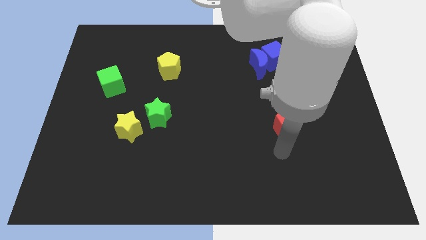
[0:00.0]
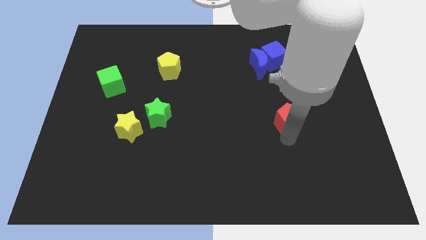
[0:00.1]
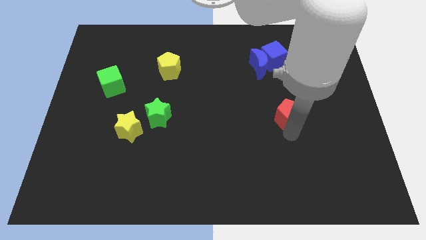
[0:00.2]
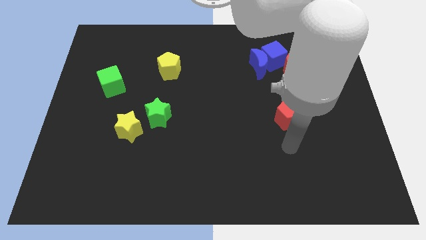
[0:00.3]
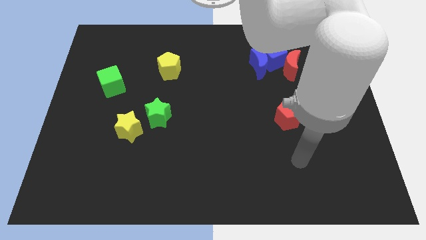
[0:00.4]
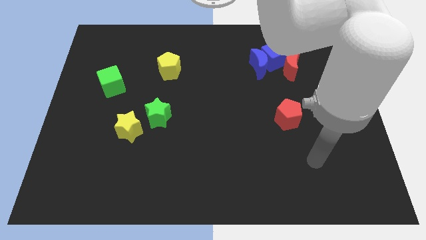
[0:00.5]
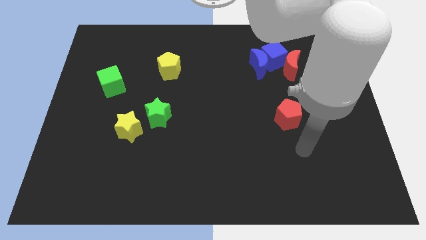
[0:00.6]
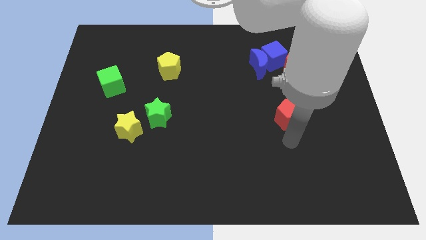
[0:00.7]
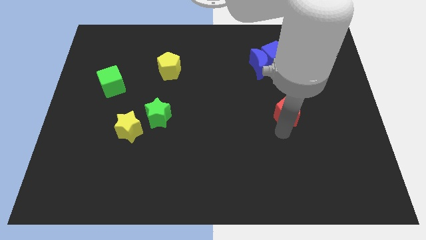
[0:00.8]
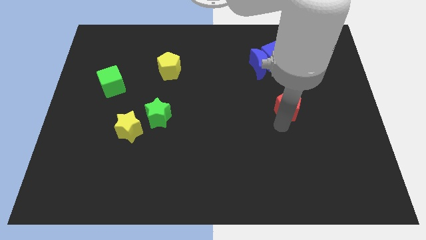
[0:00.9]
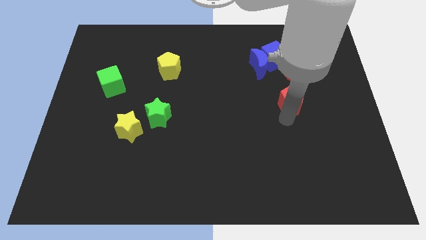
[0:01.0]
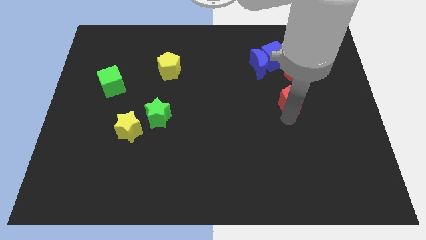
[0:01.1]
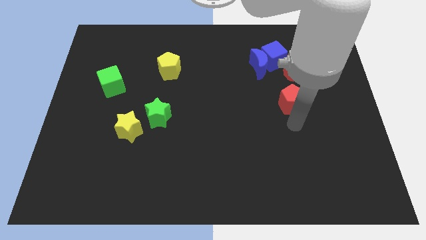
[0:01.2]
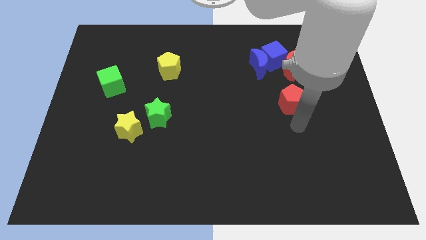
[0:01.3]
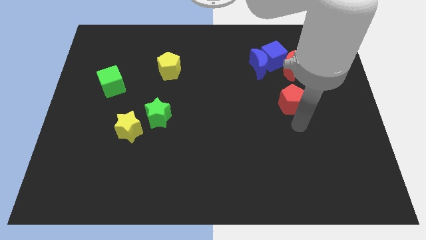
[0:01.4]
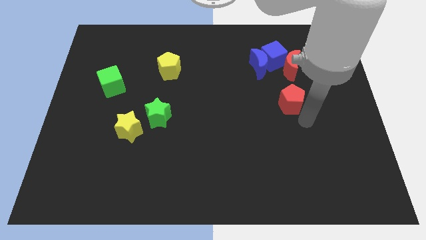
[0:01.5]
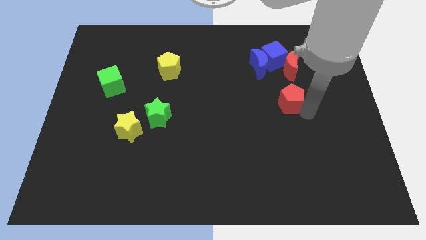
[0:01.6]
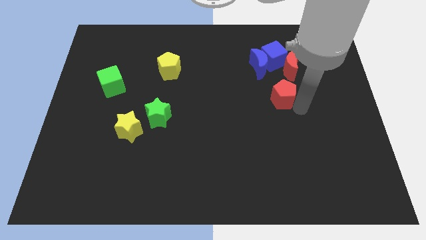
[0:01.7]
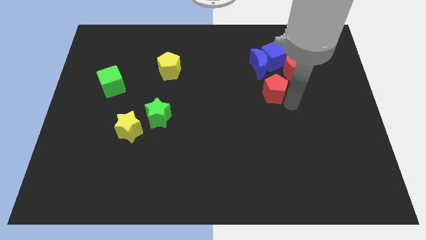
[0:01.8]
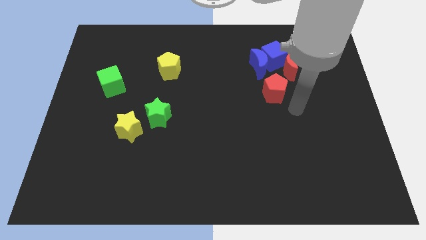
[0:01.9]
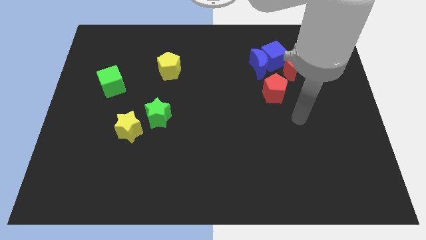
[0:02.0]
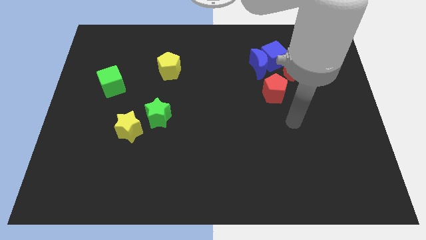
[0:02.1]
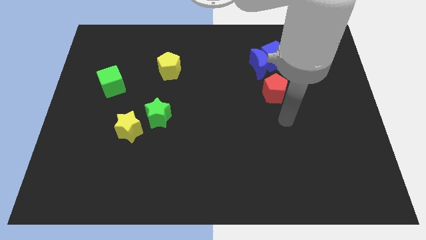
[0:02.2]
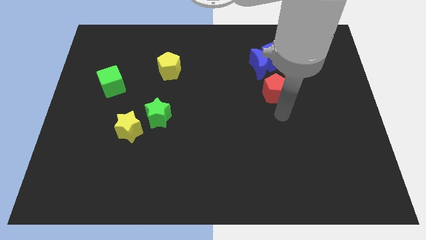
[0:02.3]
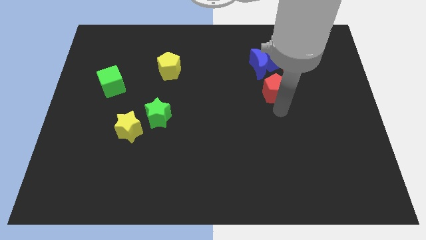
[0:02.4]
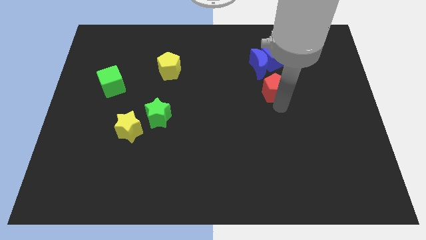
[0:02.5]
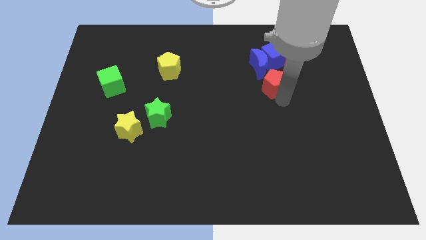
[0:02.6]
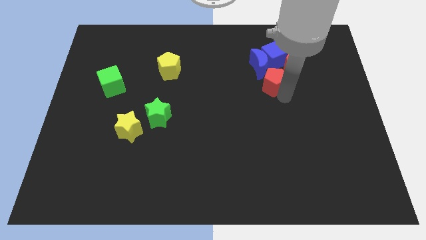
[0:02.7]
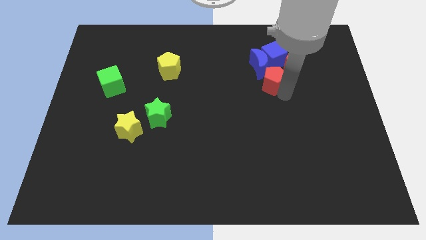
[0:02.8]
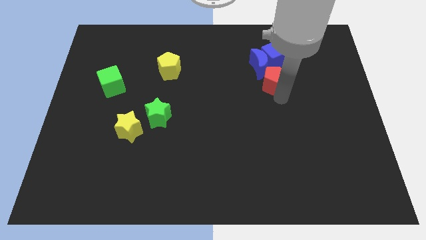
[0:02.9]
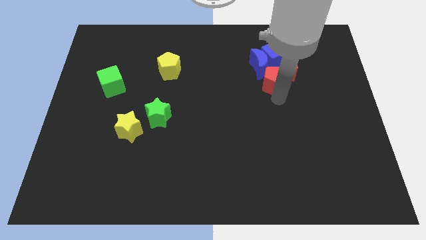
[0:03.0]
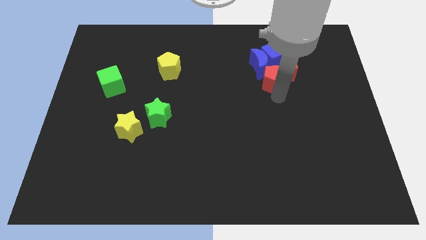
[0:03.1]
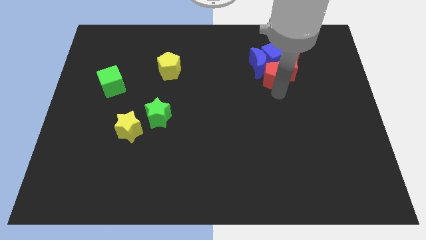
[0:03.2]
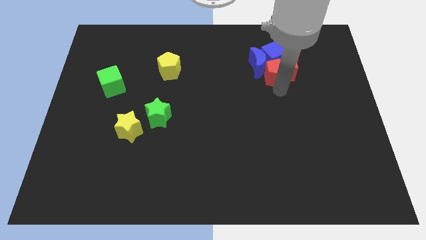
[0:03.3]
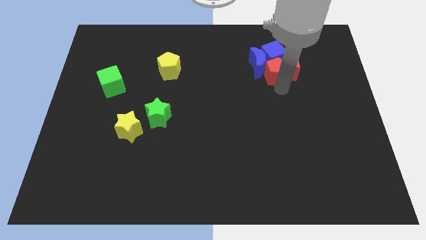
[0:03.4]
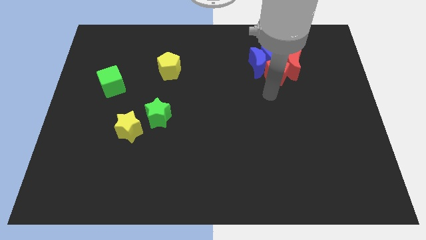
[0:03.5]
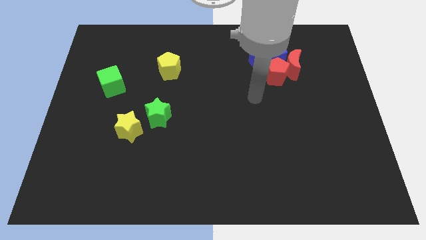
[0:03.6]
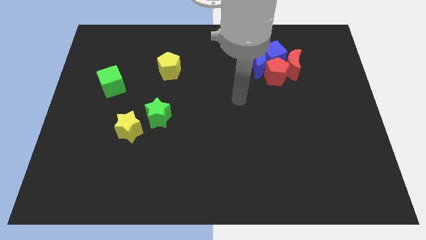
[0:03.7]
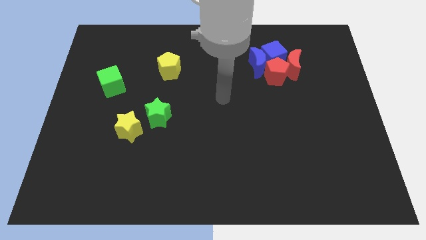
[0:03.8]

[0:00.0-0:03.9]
place the red pentagon to the left of the red crescent

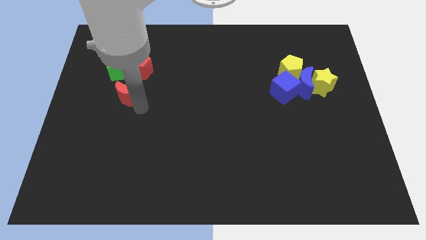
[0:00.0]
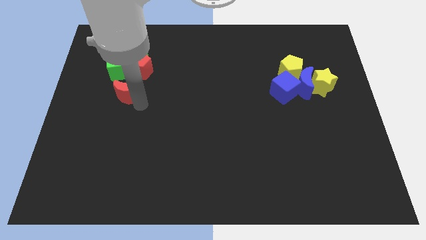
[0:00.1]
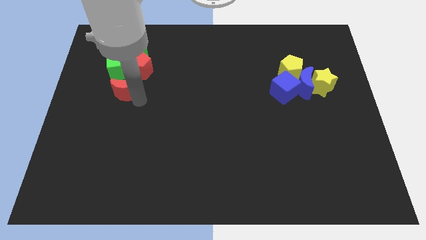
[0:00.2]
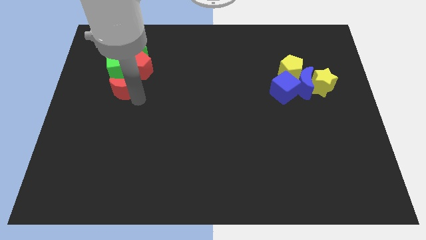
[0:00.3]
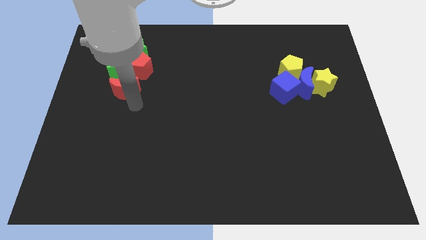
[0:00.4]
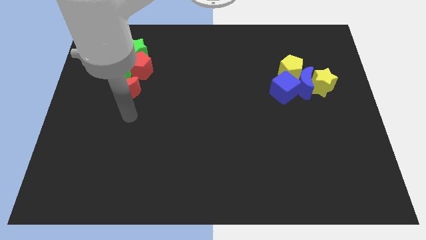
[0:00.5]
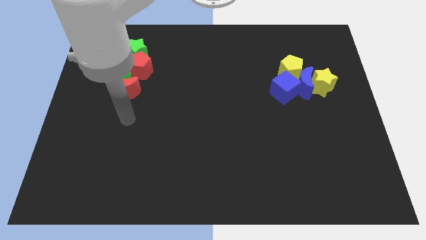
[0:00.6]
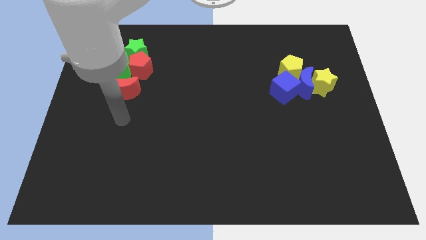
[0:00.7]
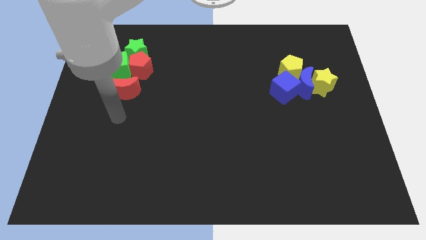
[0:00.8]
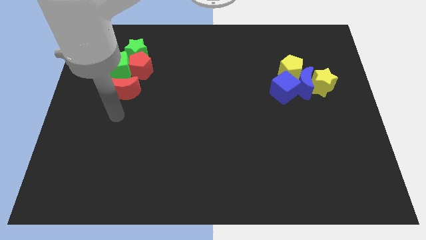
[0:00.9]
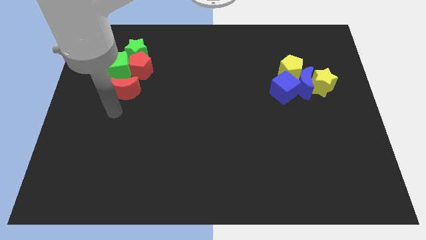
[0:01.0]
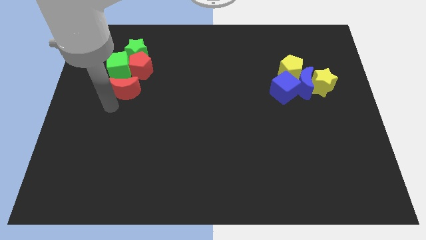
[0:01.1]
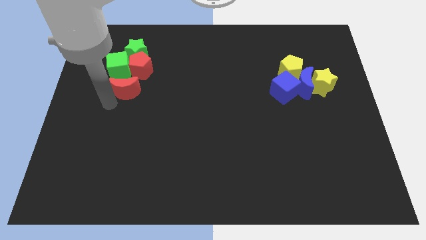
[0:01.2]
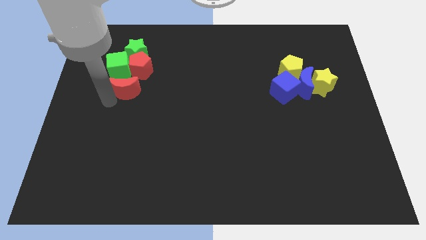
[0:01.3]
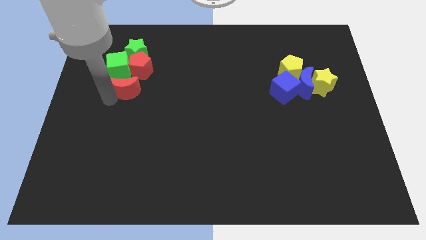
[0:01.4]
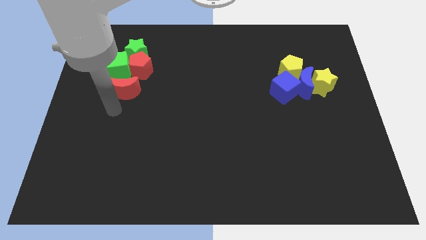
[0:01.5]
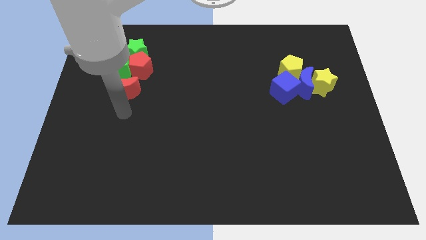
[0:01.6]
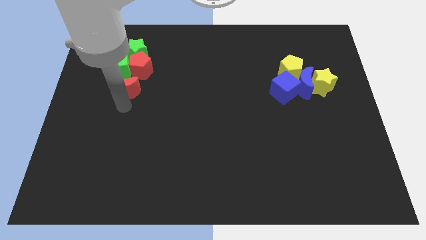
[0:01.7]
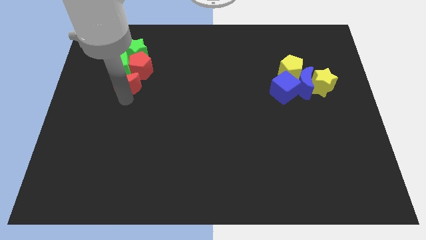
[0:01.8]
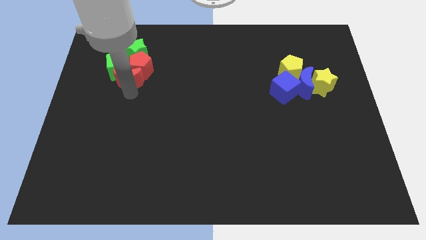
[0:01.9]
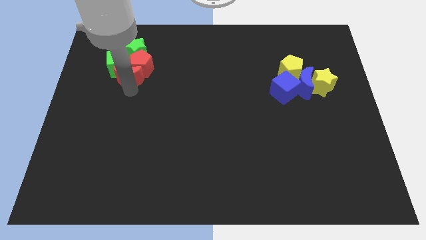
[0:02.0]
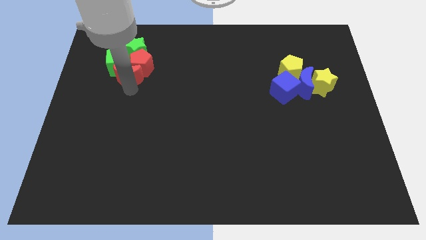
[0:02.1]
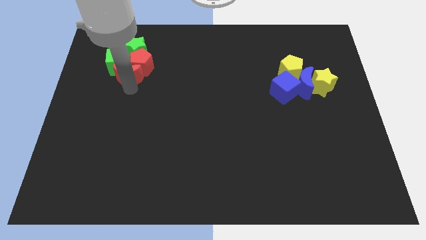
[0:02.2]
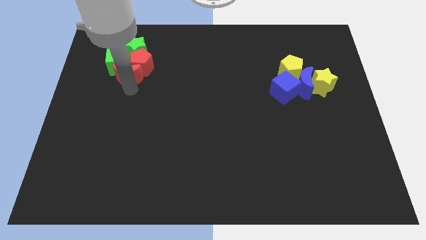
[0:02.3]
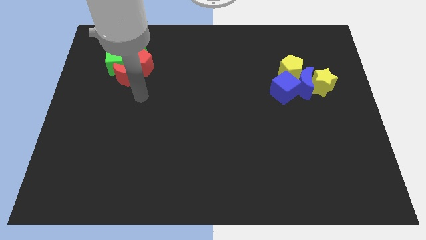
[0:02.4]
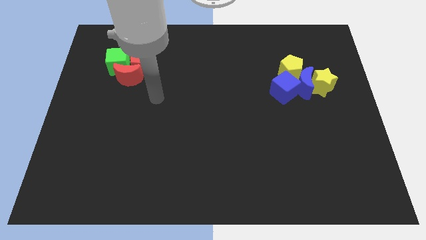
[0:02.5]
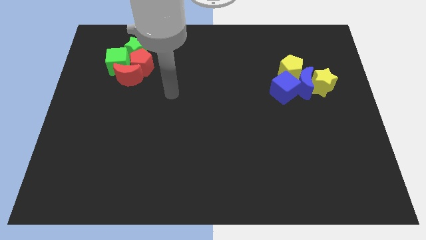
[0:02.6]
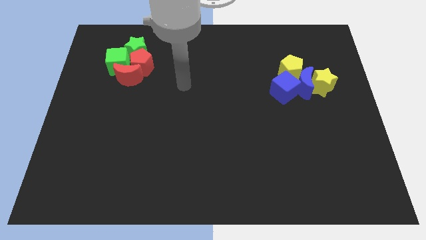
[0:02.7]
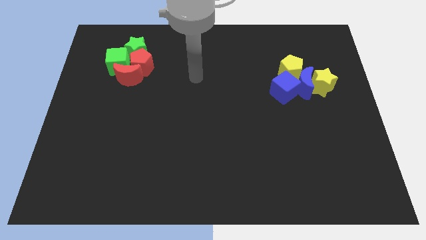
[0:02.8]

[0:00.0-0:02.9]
push the red crescent into the red pentagon and the green blocks

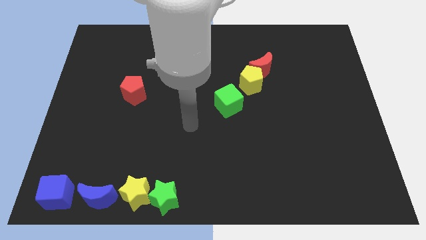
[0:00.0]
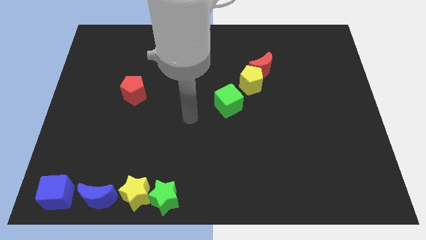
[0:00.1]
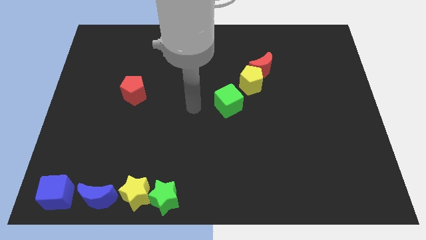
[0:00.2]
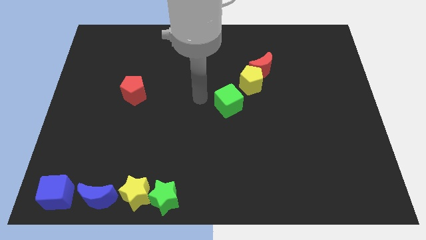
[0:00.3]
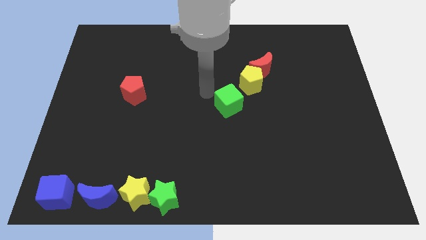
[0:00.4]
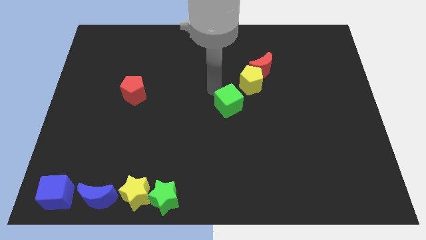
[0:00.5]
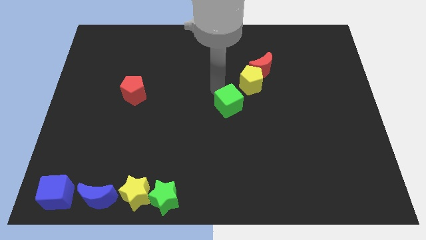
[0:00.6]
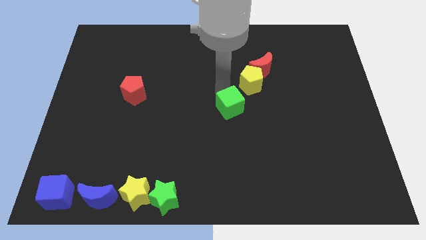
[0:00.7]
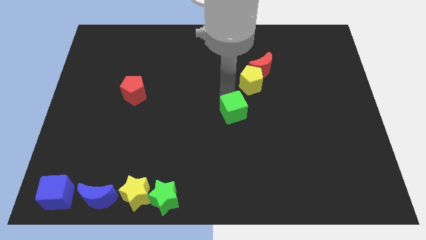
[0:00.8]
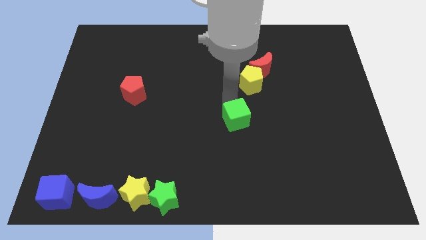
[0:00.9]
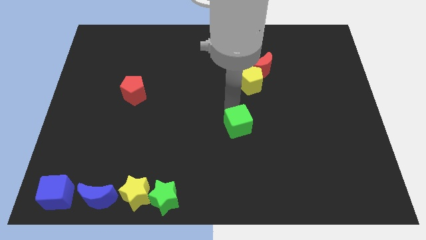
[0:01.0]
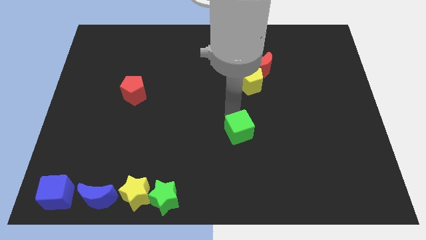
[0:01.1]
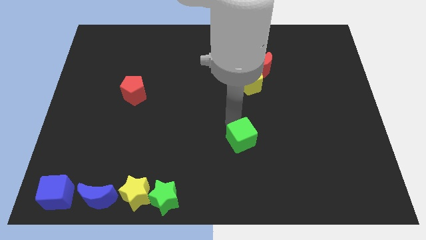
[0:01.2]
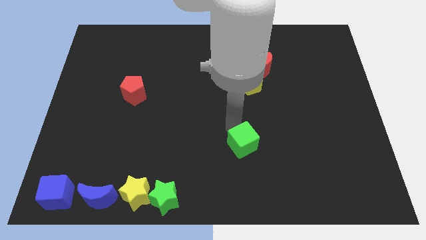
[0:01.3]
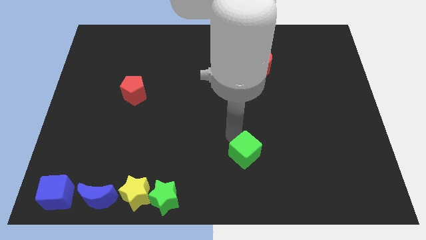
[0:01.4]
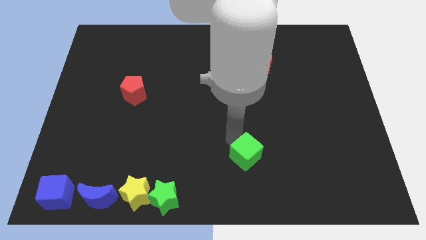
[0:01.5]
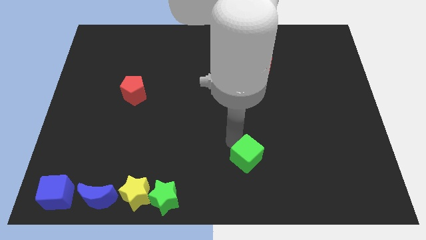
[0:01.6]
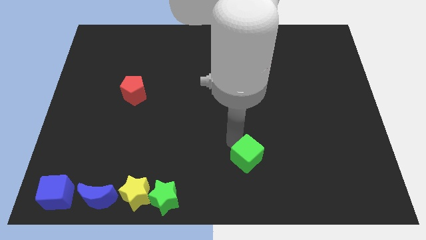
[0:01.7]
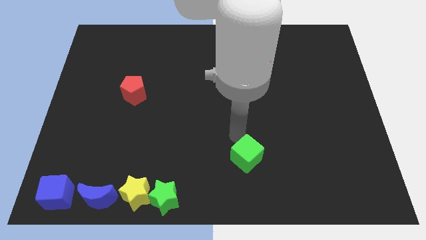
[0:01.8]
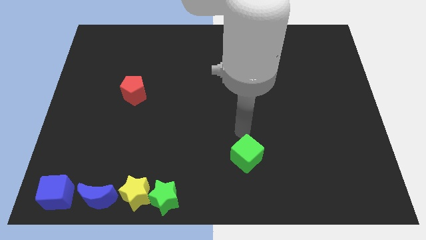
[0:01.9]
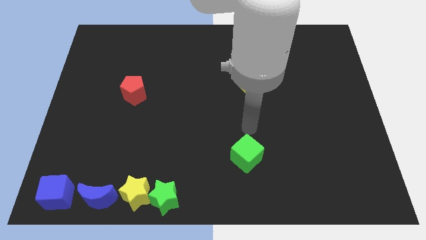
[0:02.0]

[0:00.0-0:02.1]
push green cube below yellow pentagon
